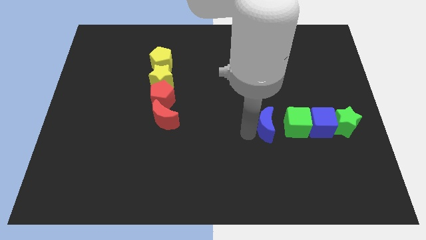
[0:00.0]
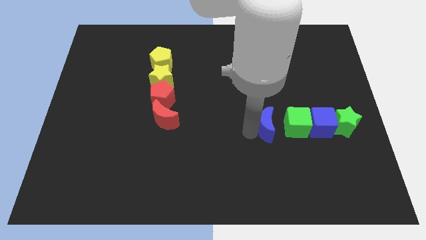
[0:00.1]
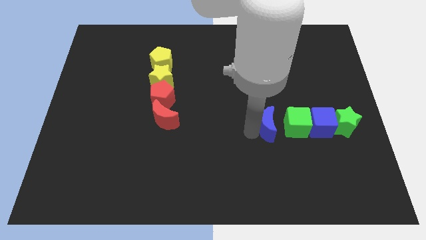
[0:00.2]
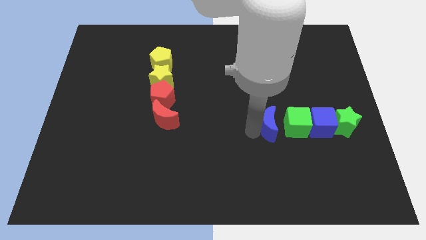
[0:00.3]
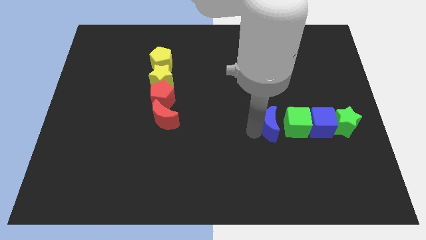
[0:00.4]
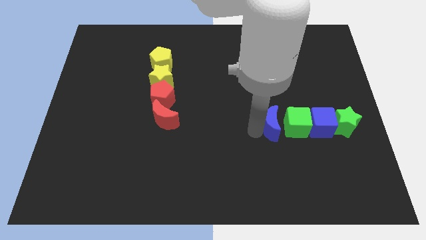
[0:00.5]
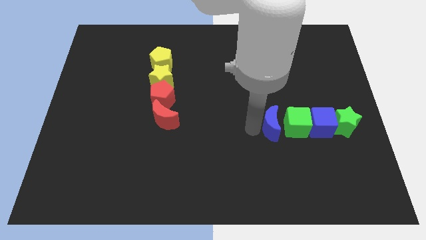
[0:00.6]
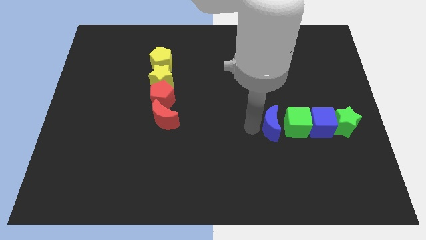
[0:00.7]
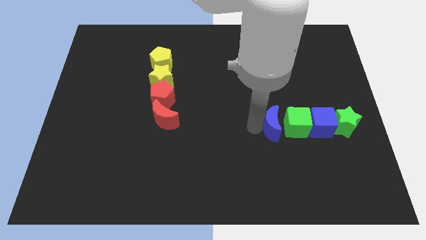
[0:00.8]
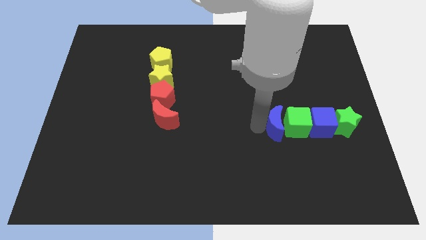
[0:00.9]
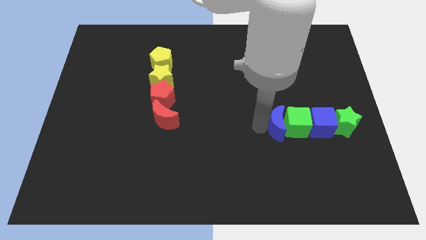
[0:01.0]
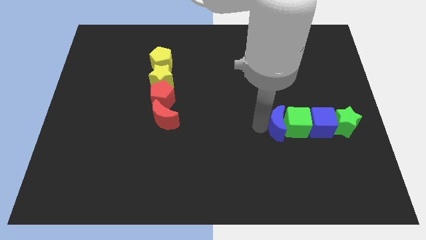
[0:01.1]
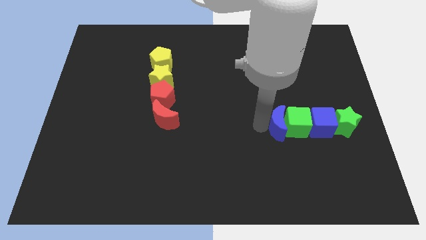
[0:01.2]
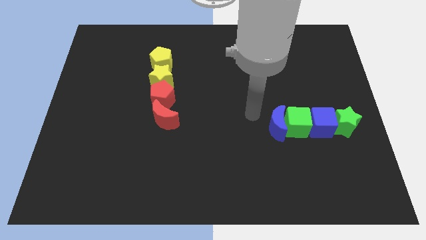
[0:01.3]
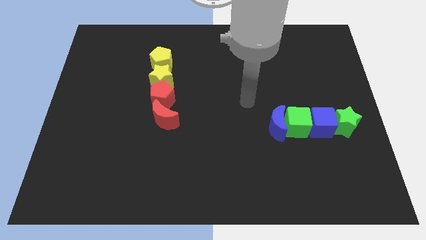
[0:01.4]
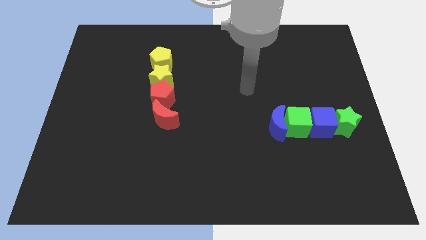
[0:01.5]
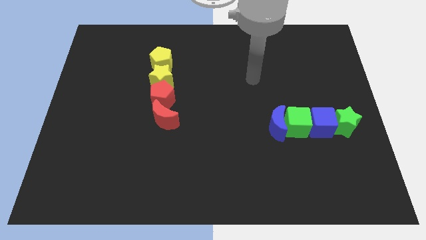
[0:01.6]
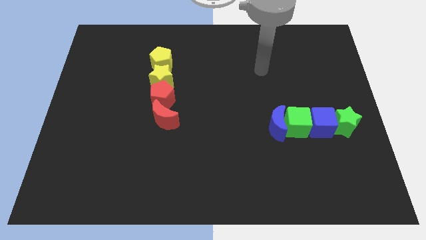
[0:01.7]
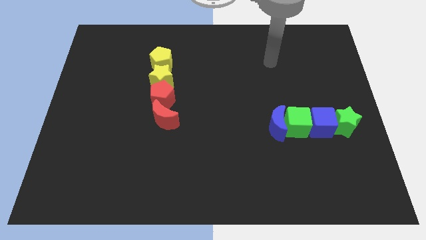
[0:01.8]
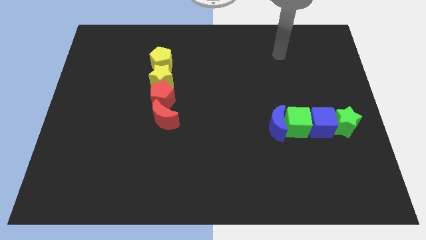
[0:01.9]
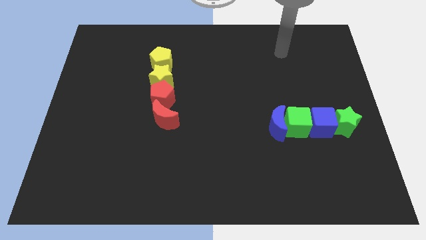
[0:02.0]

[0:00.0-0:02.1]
arrange green star blue cube green cube and blue semicircle in a horizontal line

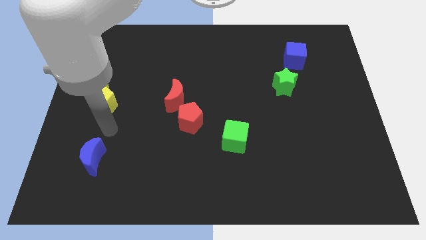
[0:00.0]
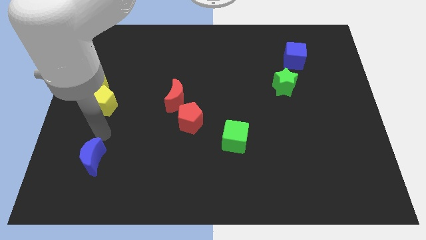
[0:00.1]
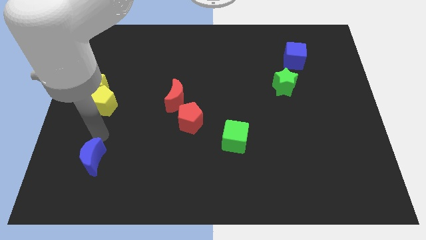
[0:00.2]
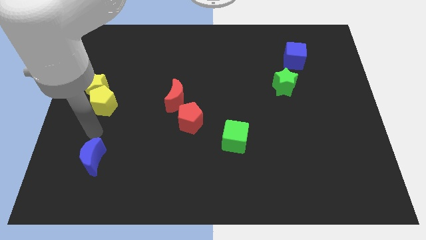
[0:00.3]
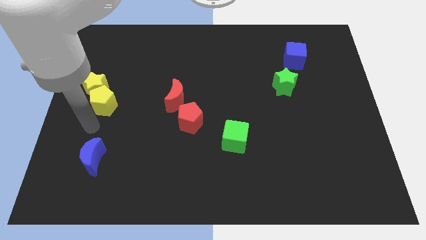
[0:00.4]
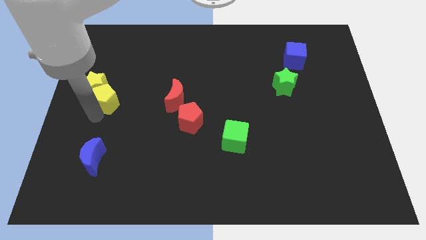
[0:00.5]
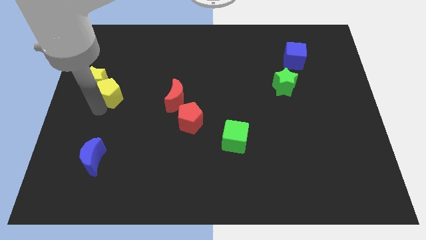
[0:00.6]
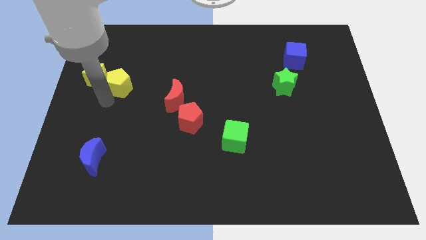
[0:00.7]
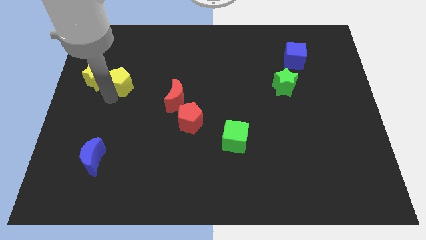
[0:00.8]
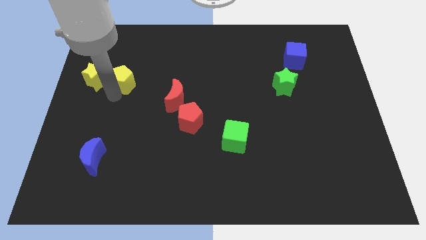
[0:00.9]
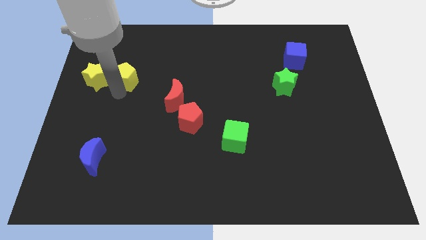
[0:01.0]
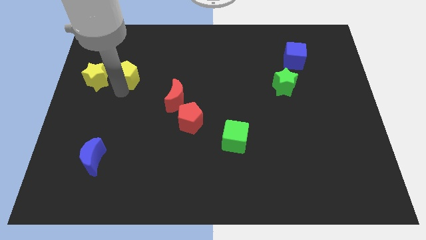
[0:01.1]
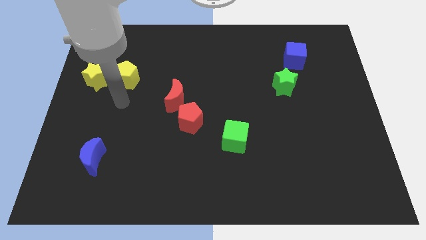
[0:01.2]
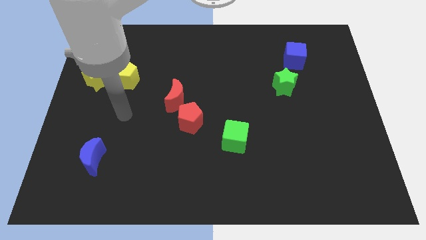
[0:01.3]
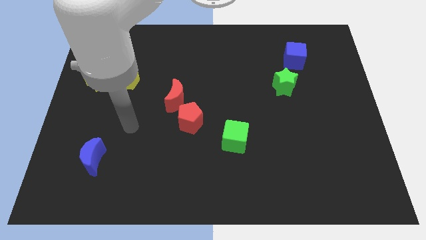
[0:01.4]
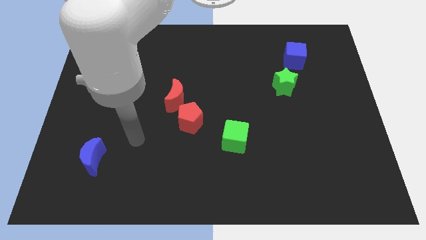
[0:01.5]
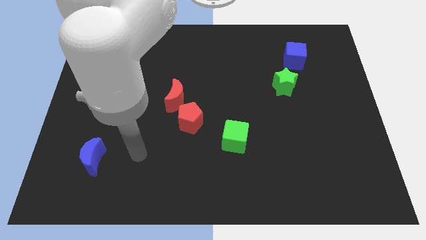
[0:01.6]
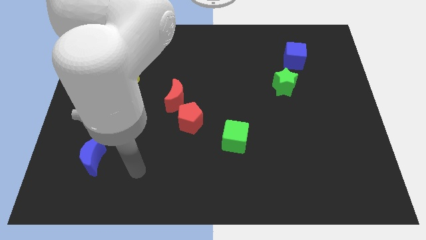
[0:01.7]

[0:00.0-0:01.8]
separate yellow pentagon and the yellow star

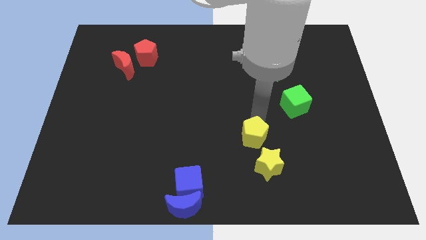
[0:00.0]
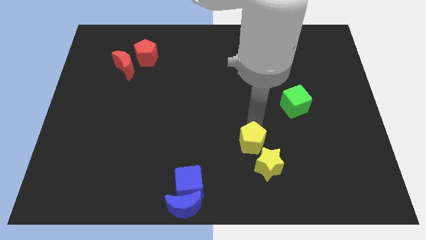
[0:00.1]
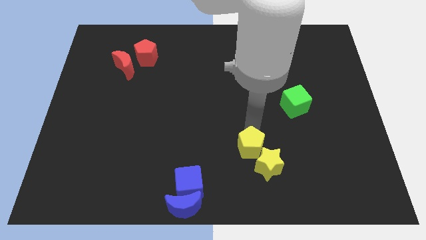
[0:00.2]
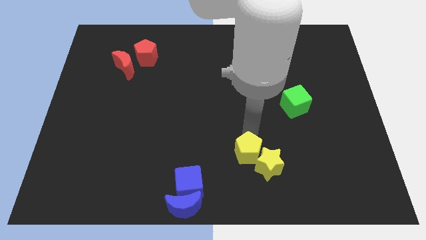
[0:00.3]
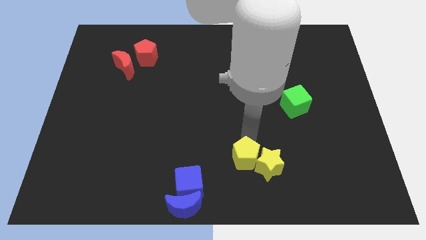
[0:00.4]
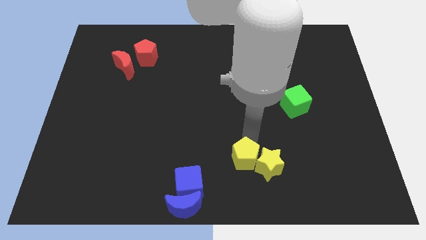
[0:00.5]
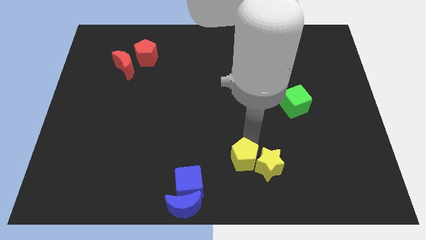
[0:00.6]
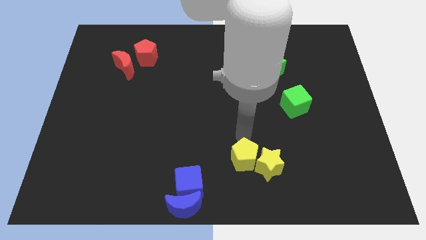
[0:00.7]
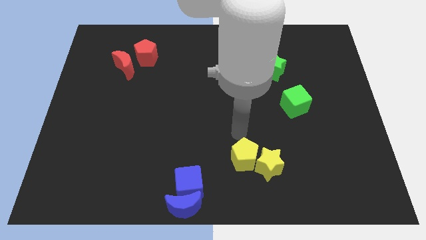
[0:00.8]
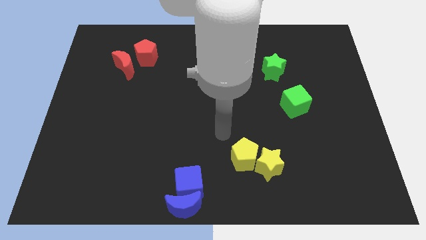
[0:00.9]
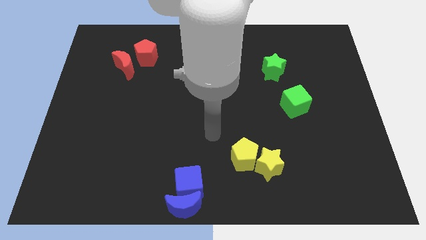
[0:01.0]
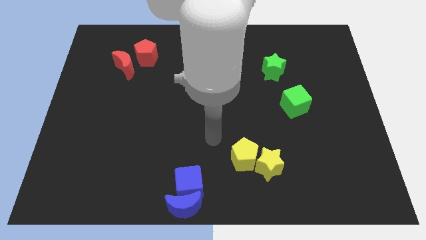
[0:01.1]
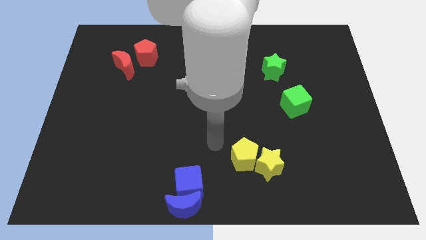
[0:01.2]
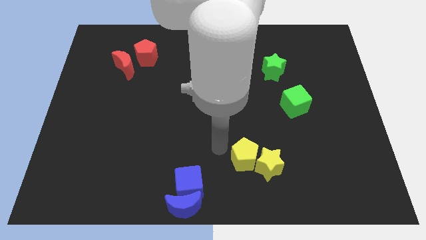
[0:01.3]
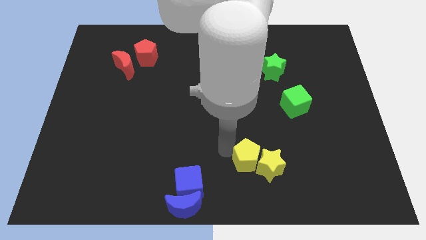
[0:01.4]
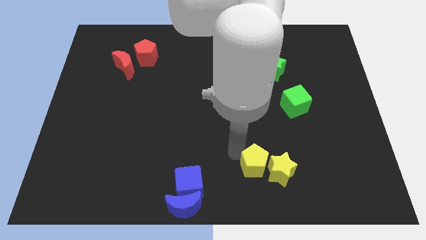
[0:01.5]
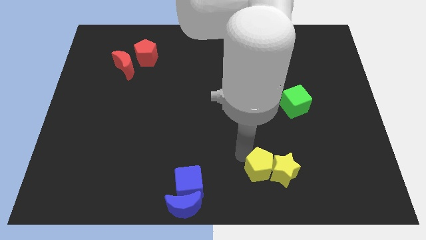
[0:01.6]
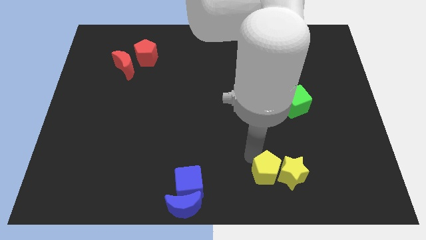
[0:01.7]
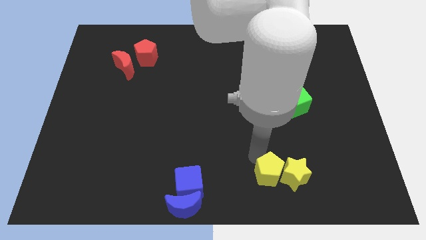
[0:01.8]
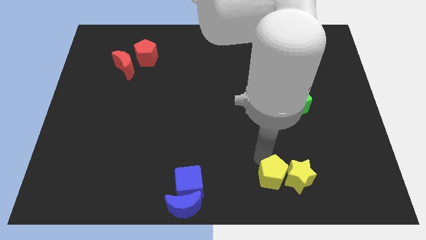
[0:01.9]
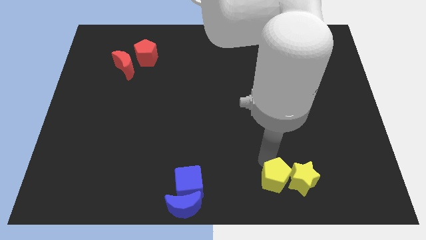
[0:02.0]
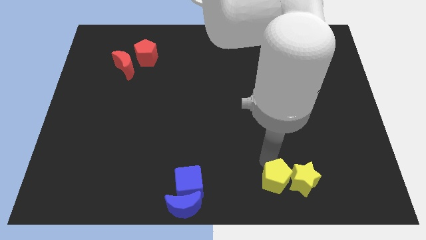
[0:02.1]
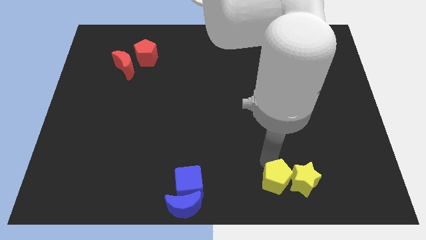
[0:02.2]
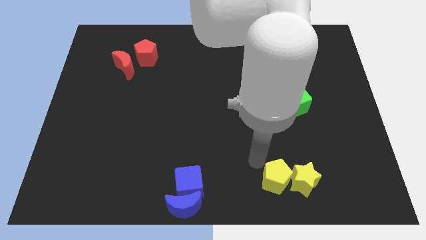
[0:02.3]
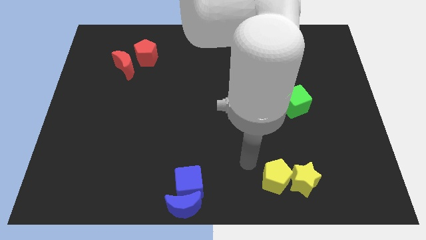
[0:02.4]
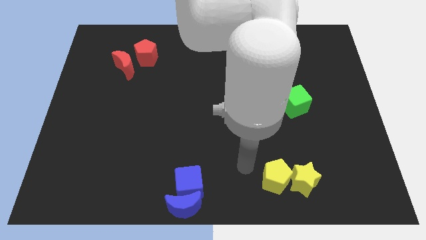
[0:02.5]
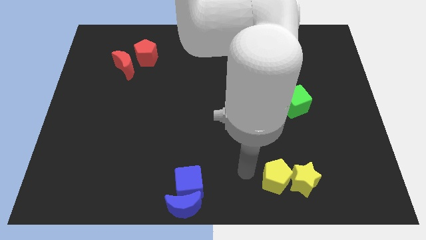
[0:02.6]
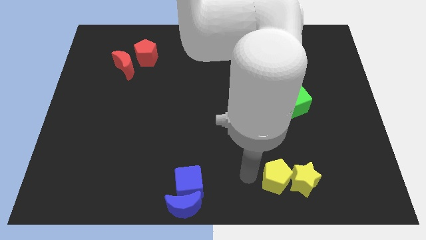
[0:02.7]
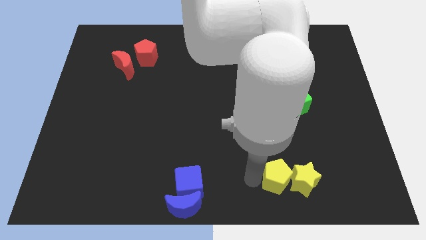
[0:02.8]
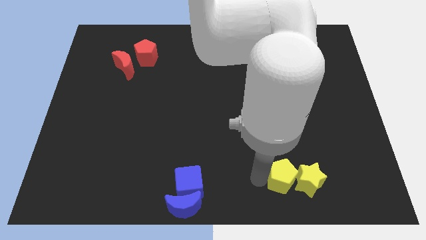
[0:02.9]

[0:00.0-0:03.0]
push the yellow blocks to the bottom of the green cube

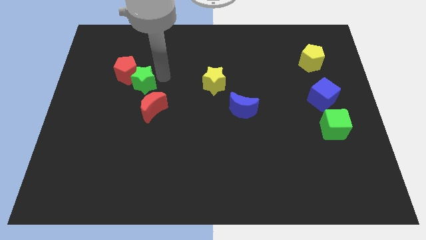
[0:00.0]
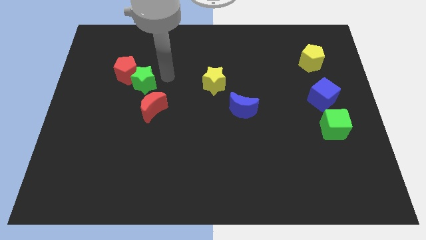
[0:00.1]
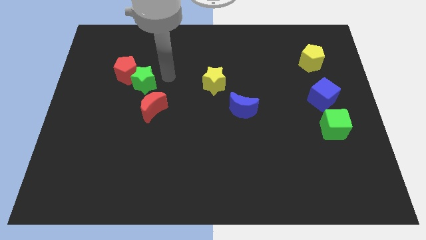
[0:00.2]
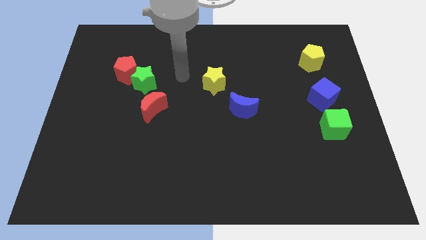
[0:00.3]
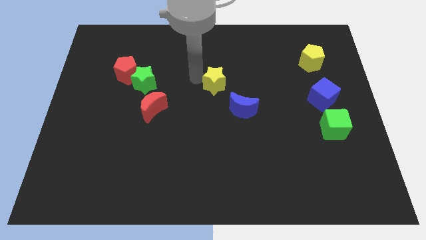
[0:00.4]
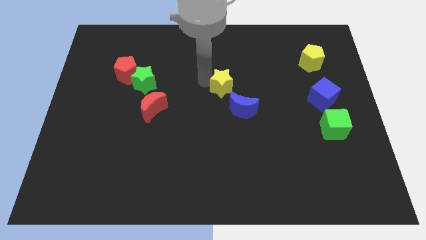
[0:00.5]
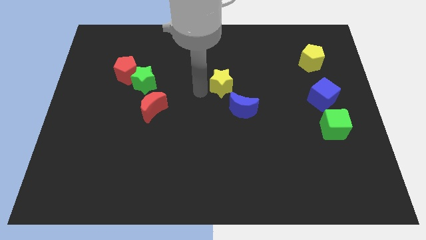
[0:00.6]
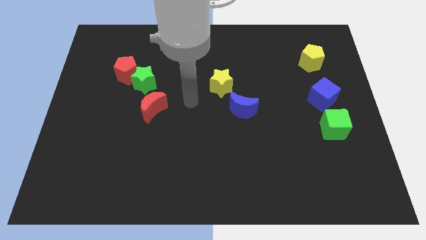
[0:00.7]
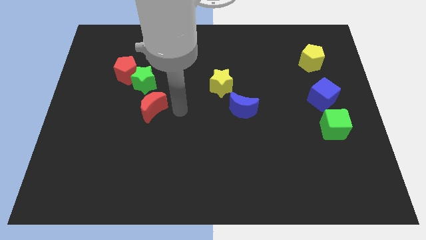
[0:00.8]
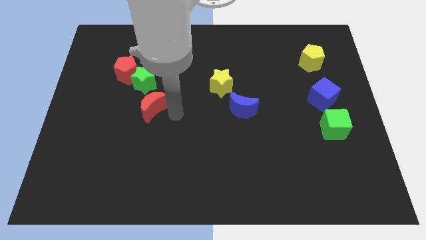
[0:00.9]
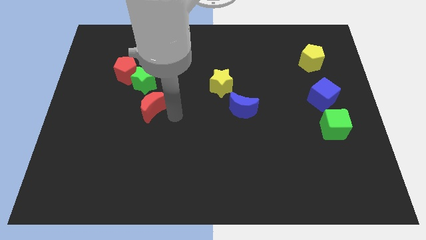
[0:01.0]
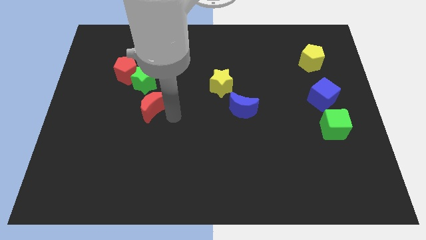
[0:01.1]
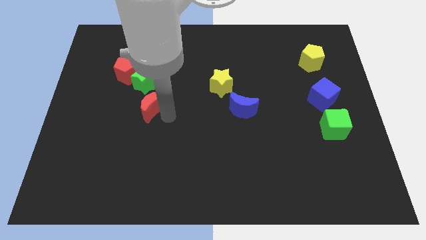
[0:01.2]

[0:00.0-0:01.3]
move your arm to the right bottom of the red crescent

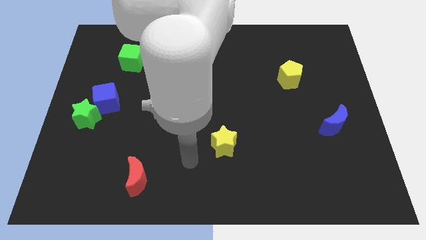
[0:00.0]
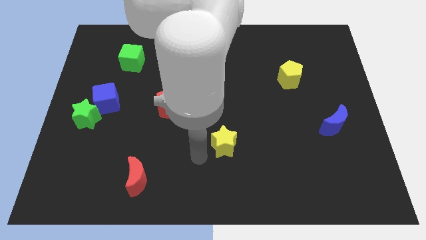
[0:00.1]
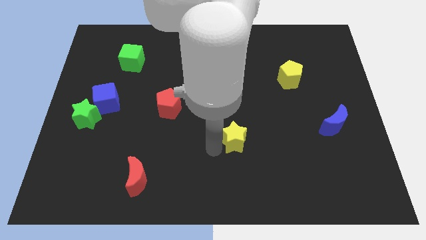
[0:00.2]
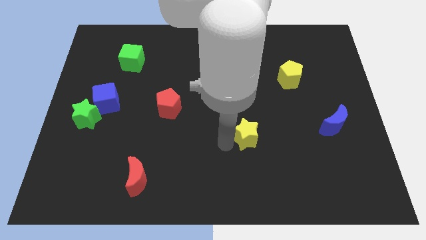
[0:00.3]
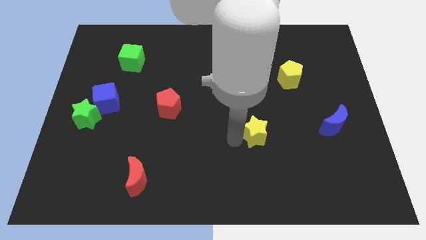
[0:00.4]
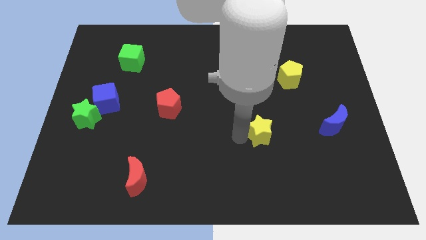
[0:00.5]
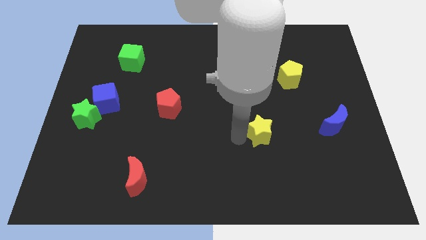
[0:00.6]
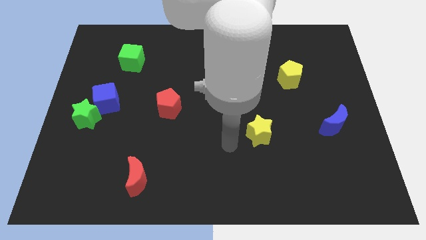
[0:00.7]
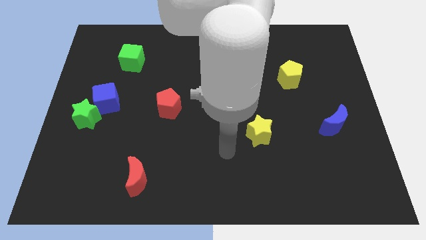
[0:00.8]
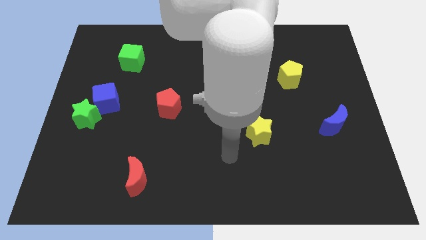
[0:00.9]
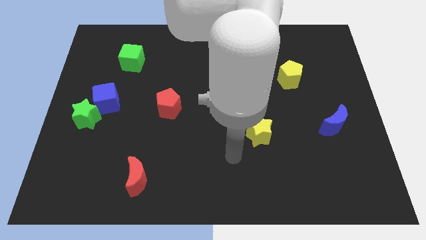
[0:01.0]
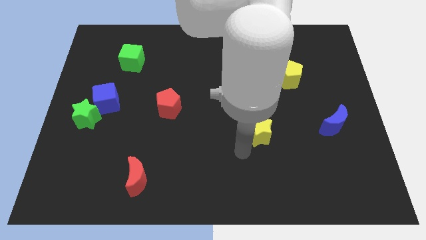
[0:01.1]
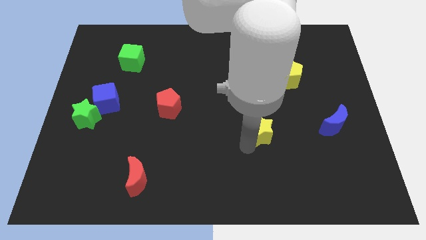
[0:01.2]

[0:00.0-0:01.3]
move the yellow star diagonally to the yellow pentagon
